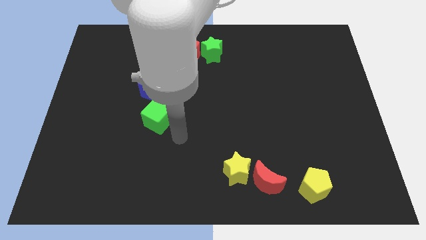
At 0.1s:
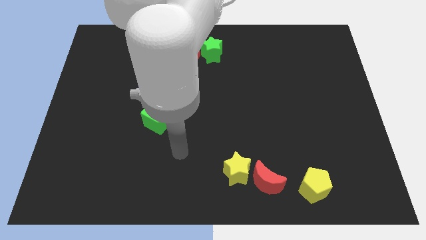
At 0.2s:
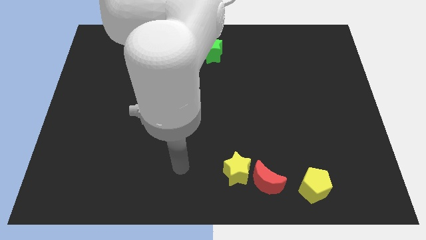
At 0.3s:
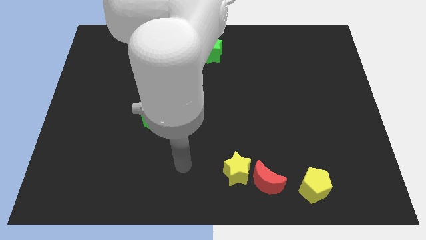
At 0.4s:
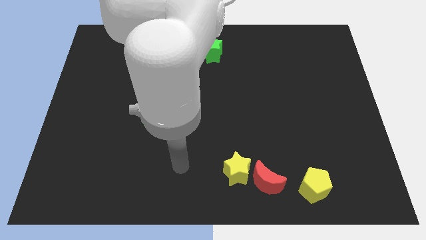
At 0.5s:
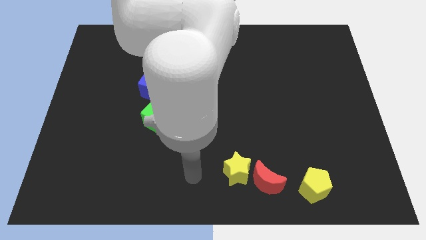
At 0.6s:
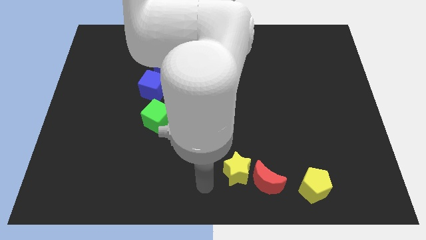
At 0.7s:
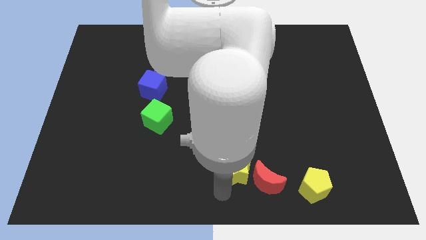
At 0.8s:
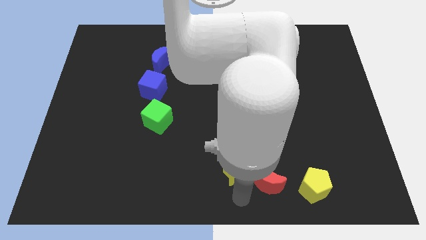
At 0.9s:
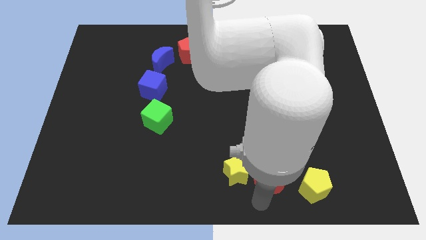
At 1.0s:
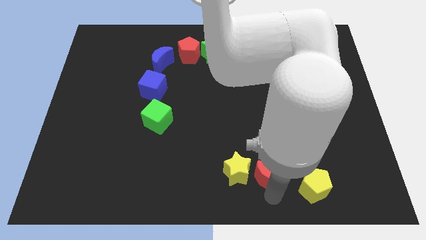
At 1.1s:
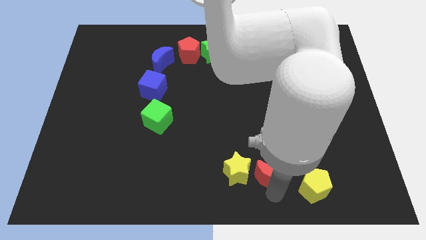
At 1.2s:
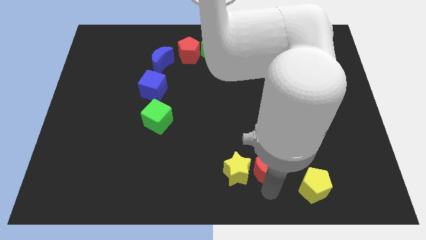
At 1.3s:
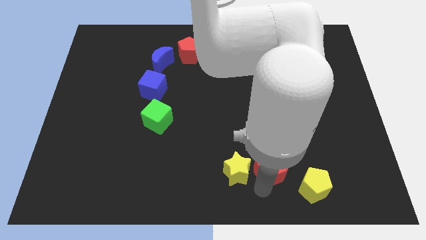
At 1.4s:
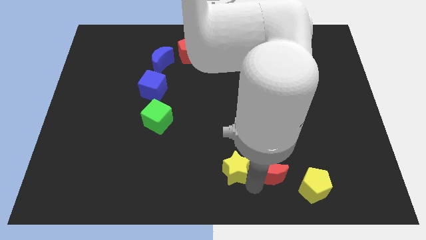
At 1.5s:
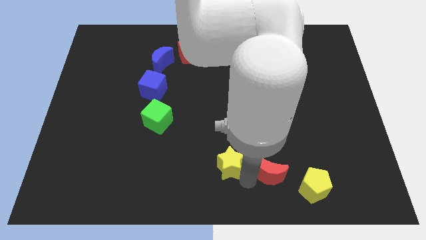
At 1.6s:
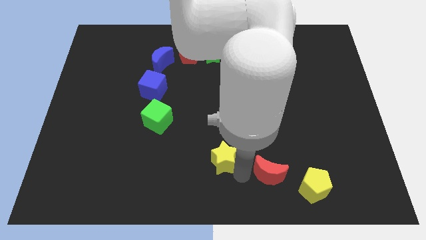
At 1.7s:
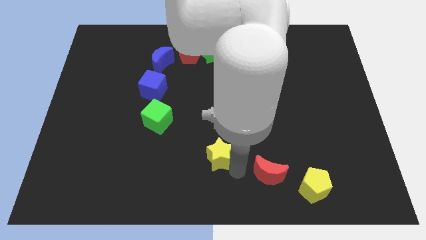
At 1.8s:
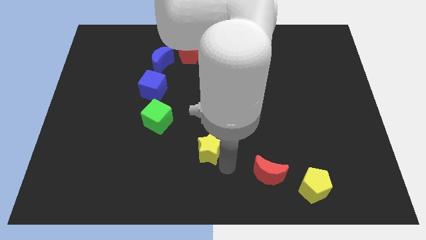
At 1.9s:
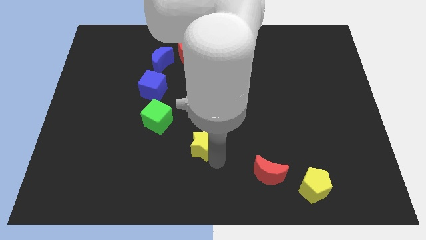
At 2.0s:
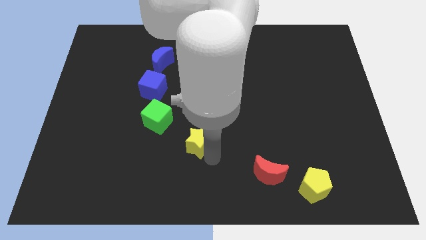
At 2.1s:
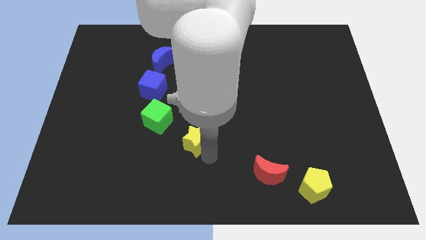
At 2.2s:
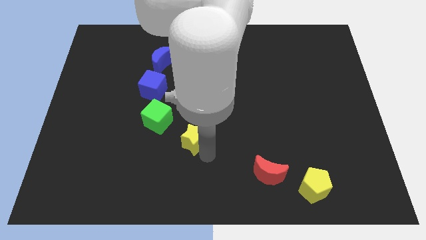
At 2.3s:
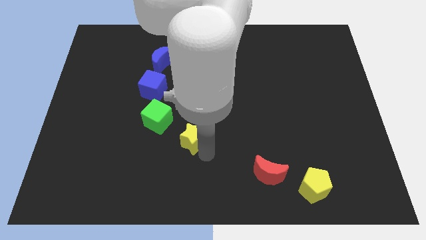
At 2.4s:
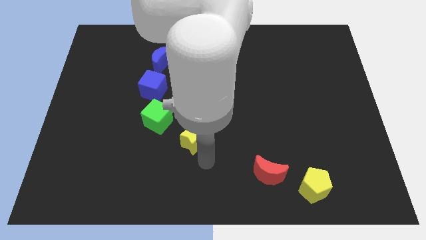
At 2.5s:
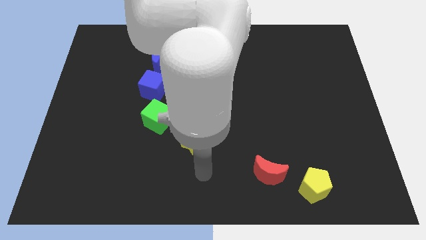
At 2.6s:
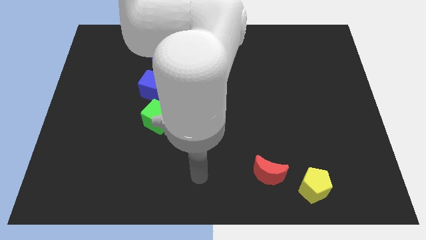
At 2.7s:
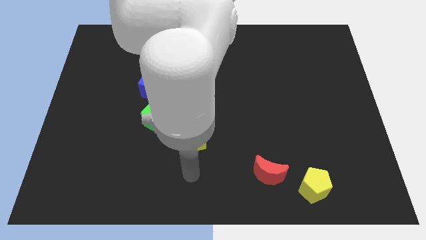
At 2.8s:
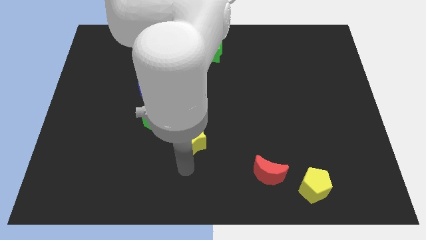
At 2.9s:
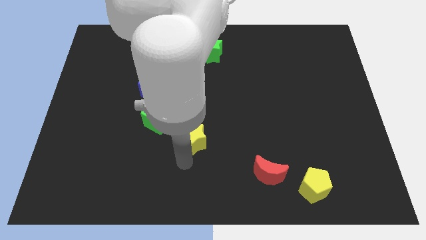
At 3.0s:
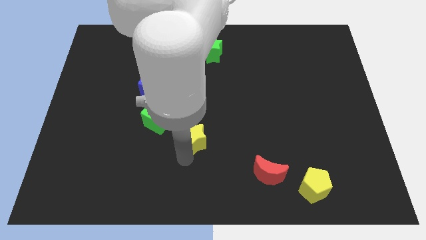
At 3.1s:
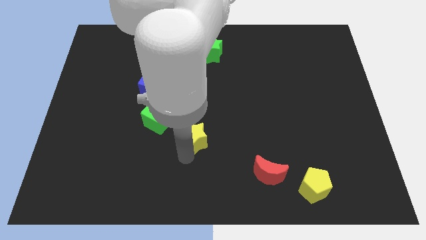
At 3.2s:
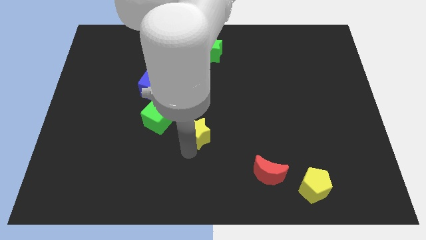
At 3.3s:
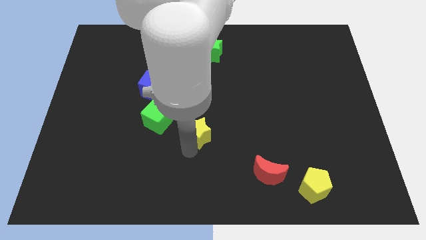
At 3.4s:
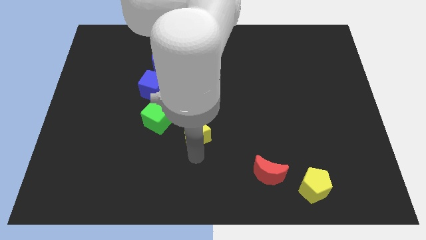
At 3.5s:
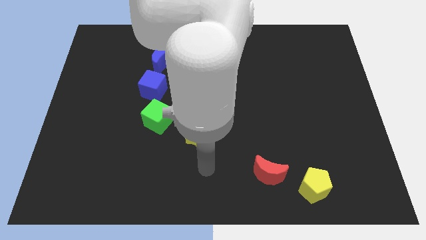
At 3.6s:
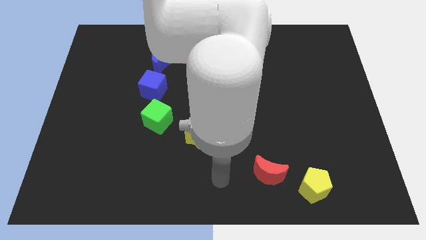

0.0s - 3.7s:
move the yellow star to the right side of the green star

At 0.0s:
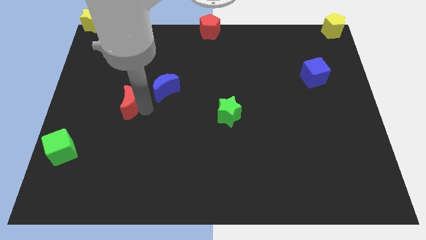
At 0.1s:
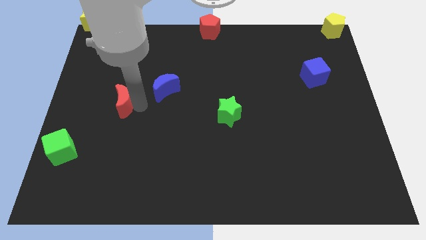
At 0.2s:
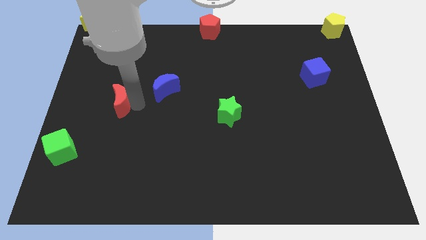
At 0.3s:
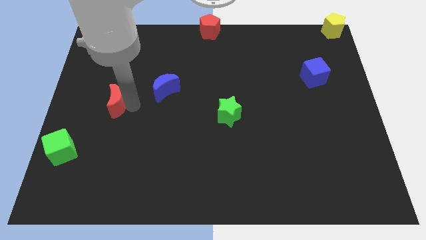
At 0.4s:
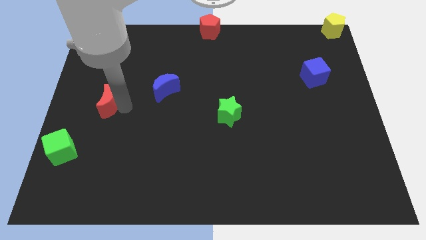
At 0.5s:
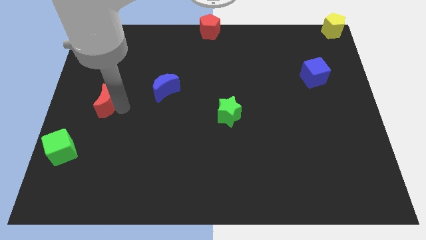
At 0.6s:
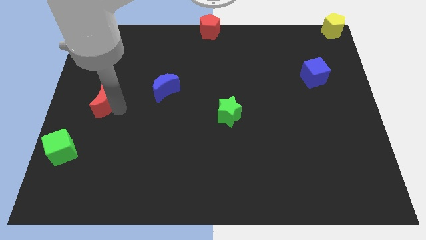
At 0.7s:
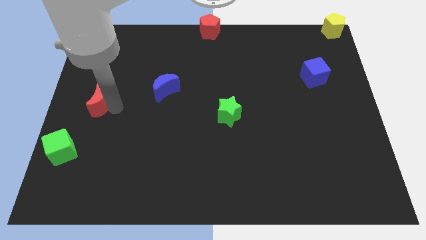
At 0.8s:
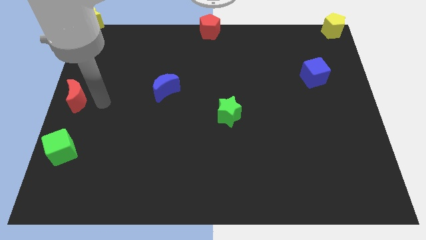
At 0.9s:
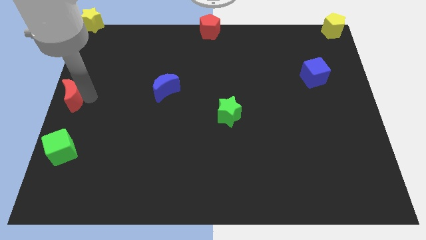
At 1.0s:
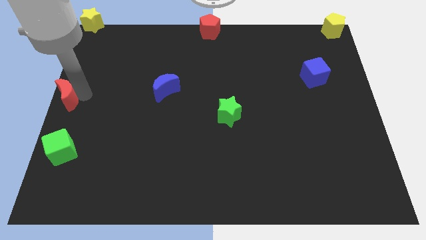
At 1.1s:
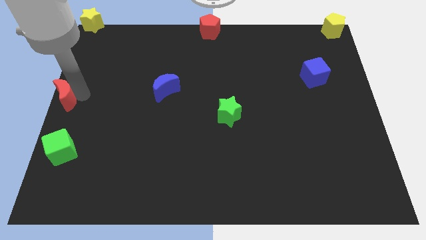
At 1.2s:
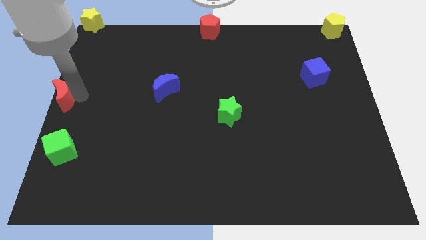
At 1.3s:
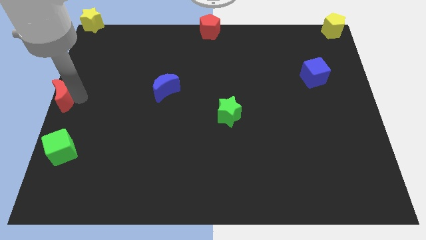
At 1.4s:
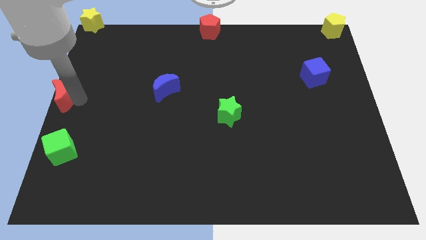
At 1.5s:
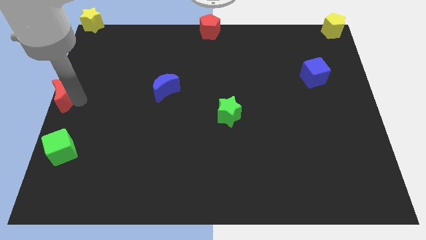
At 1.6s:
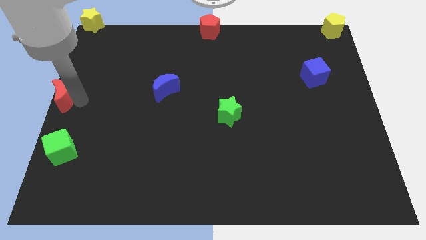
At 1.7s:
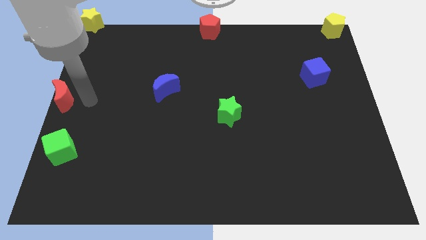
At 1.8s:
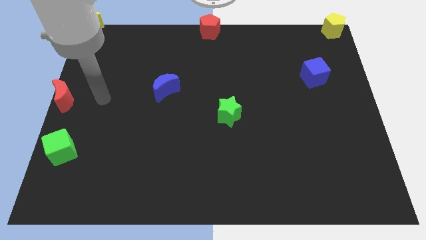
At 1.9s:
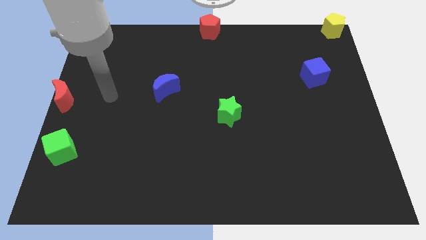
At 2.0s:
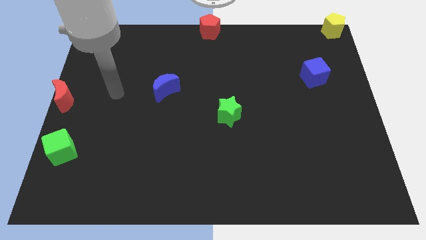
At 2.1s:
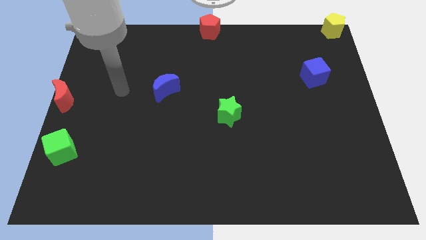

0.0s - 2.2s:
place red crescent to the center left of the board

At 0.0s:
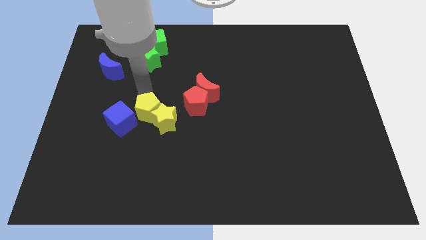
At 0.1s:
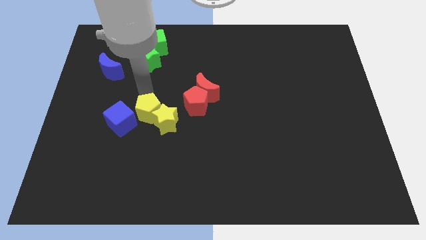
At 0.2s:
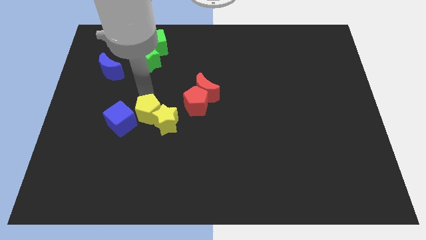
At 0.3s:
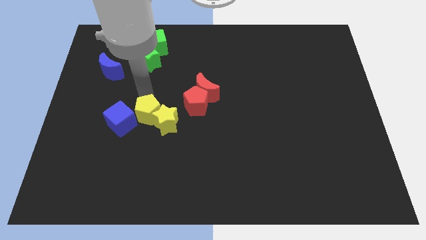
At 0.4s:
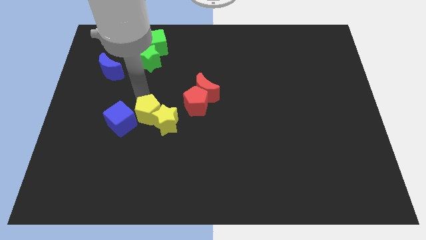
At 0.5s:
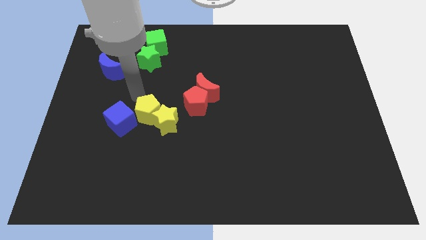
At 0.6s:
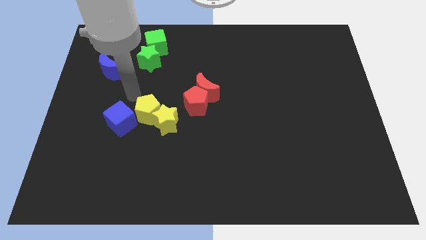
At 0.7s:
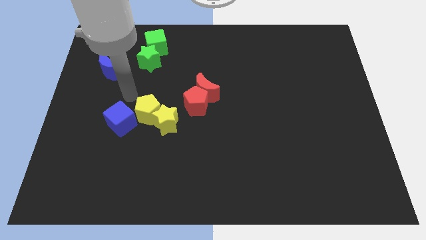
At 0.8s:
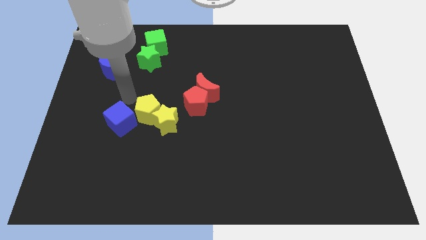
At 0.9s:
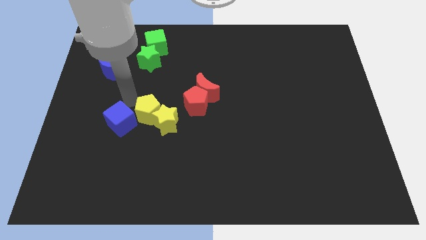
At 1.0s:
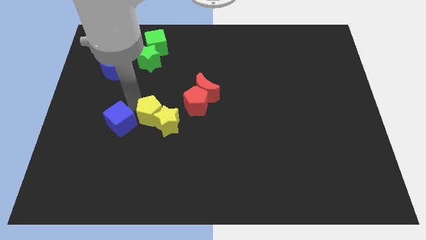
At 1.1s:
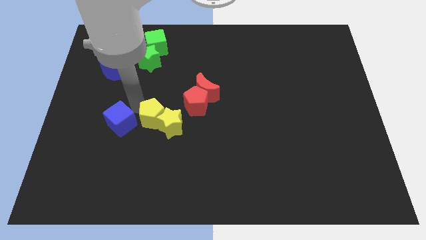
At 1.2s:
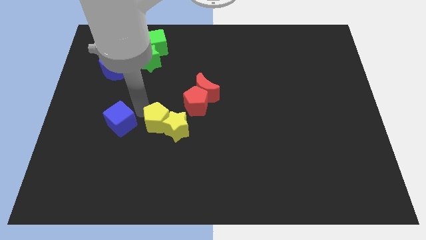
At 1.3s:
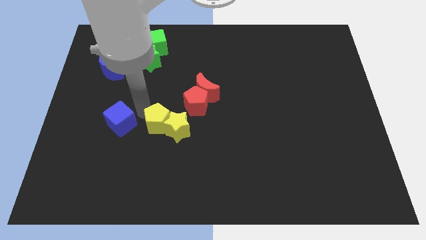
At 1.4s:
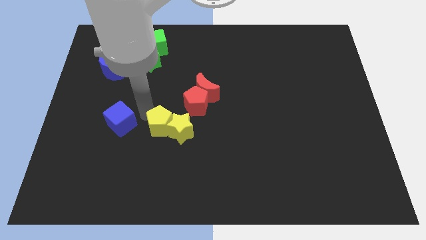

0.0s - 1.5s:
place your arm in between blue cube and the yellow pentagon

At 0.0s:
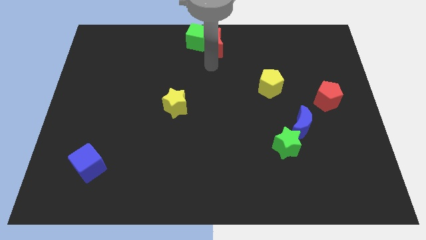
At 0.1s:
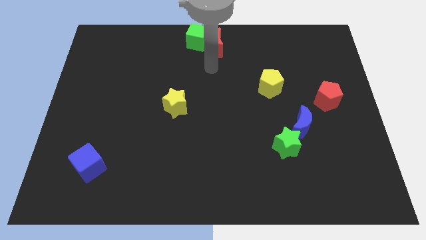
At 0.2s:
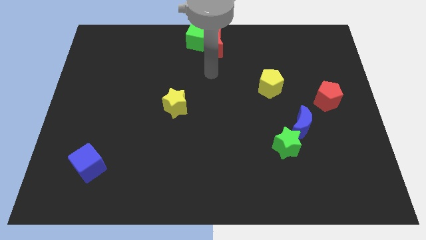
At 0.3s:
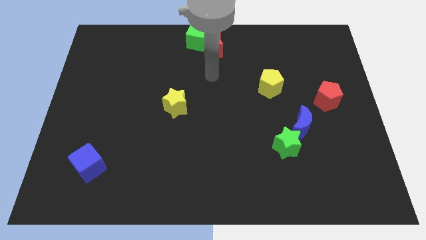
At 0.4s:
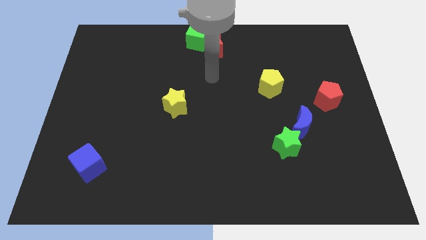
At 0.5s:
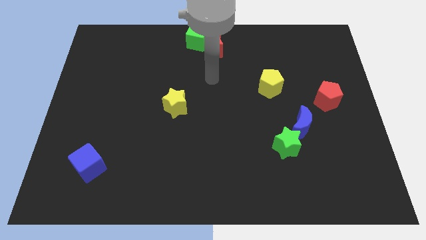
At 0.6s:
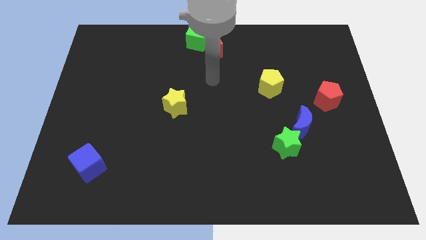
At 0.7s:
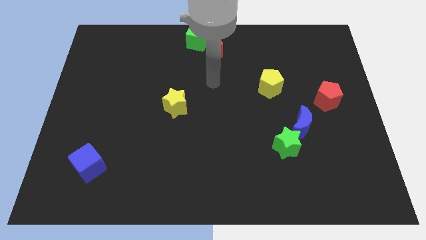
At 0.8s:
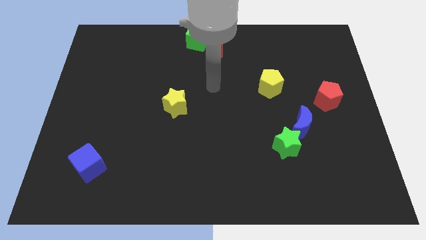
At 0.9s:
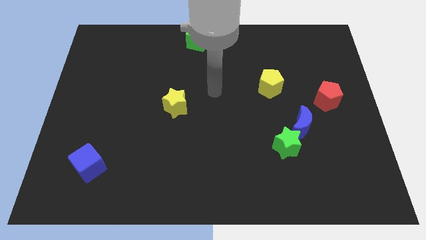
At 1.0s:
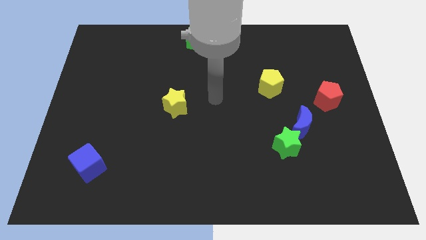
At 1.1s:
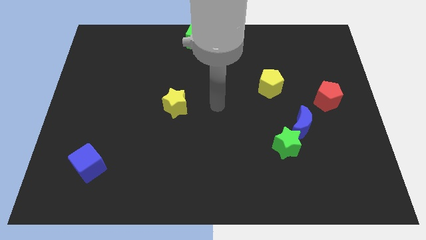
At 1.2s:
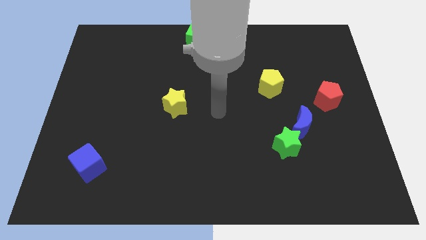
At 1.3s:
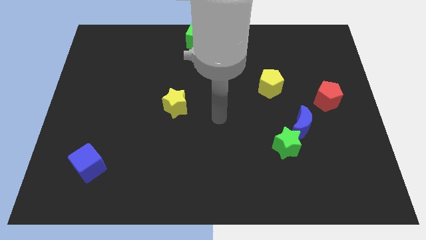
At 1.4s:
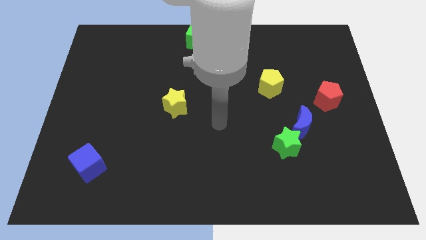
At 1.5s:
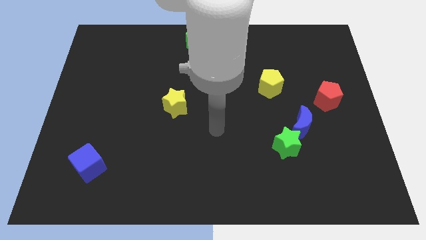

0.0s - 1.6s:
place your arm to the center of the board
